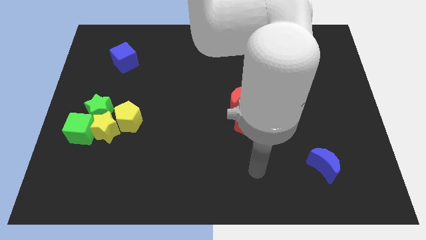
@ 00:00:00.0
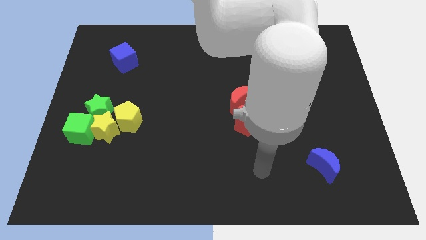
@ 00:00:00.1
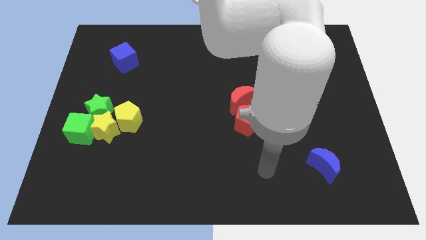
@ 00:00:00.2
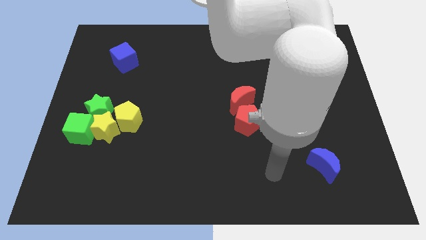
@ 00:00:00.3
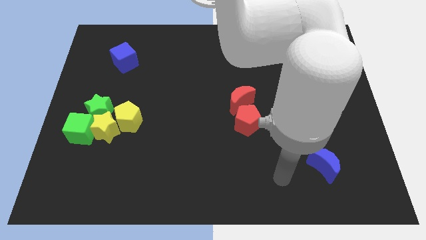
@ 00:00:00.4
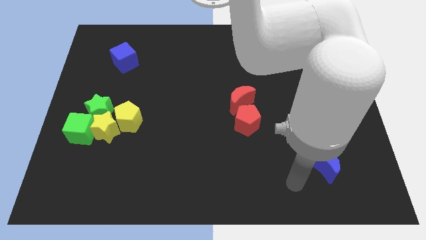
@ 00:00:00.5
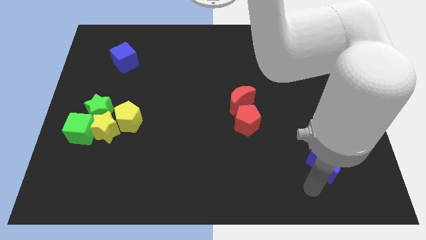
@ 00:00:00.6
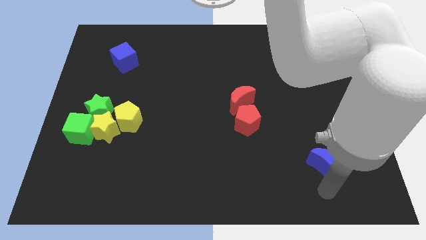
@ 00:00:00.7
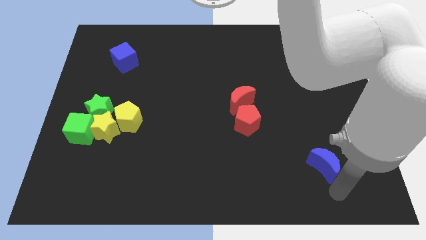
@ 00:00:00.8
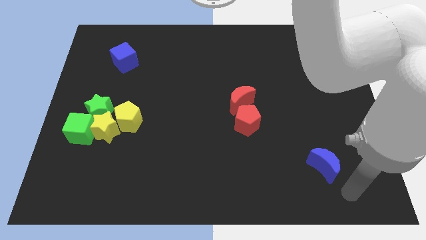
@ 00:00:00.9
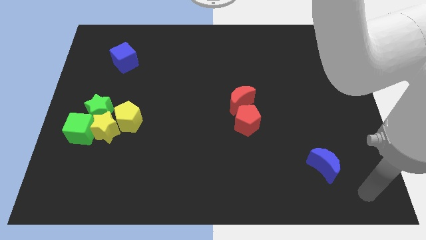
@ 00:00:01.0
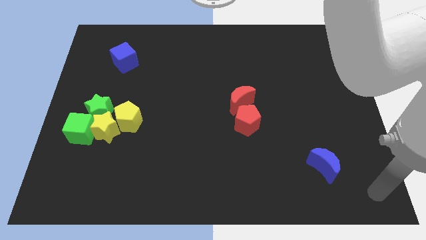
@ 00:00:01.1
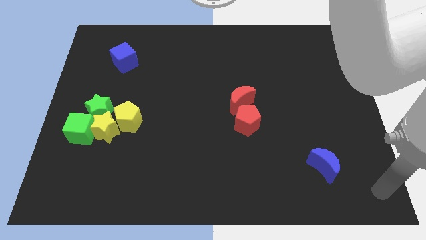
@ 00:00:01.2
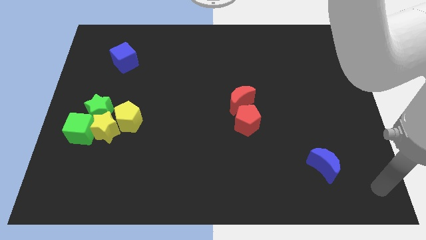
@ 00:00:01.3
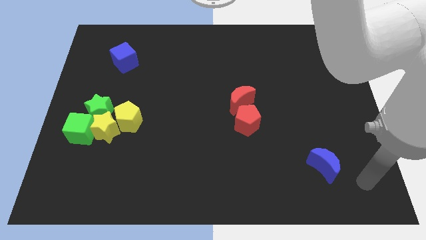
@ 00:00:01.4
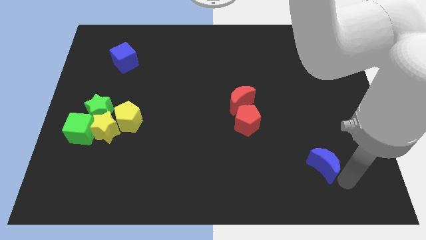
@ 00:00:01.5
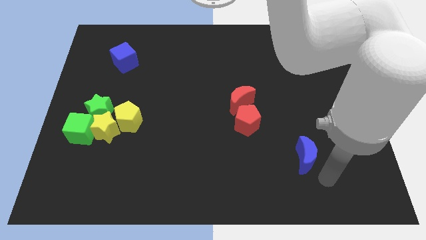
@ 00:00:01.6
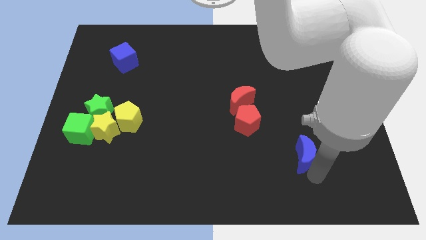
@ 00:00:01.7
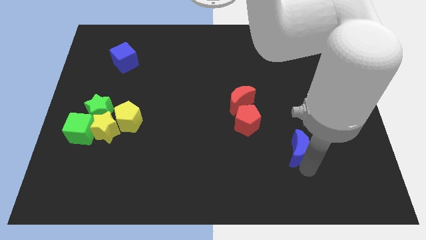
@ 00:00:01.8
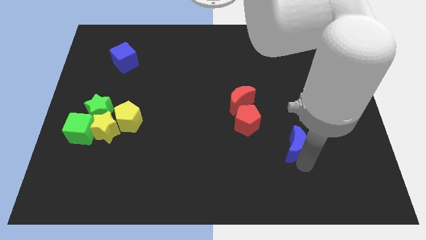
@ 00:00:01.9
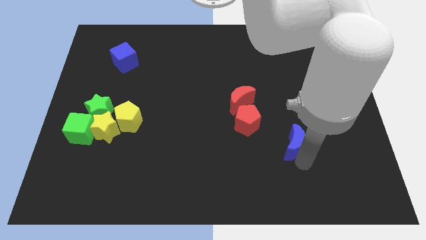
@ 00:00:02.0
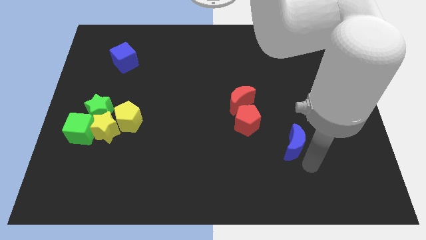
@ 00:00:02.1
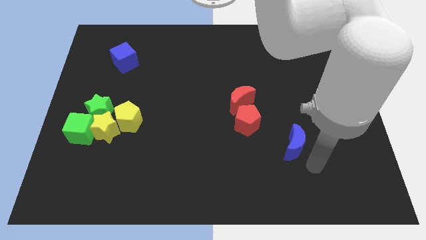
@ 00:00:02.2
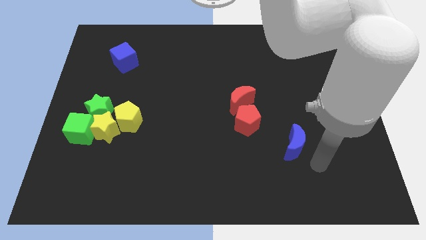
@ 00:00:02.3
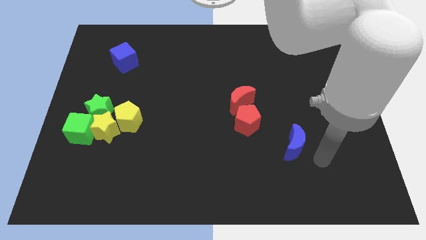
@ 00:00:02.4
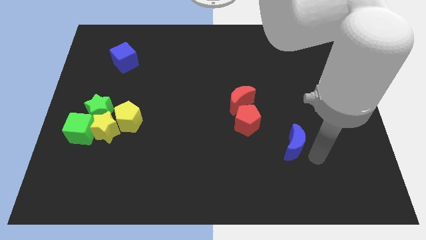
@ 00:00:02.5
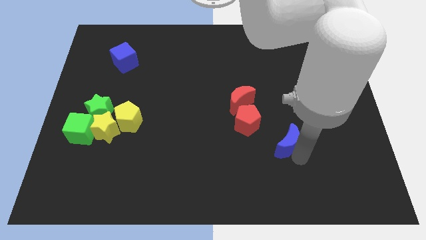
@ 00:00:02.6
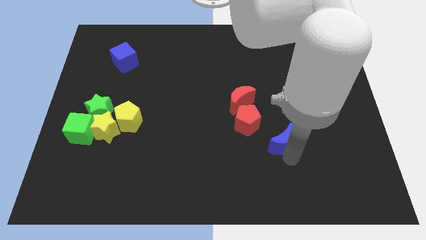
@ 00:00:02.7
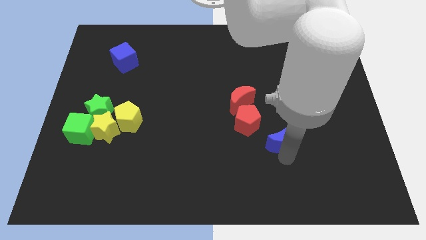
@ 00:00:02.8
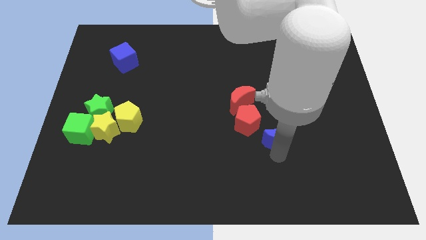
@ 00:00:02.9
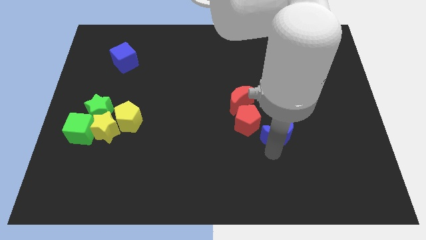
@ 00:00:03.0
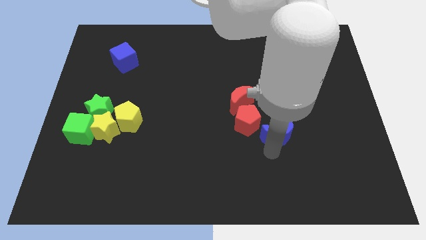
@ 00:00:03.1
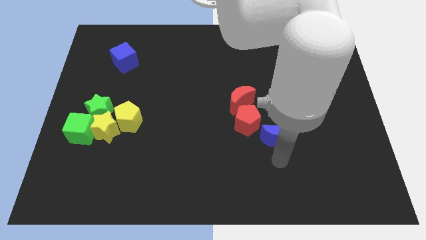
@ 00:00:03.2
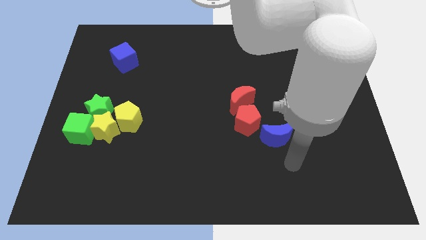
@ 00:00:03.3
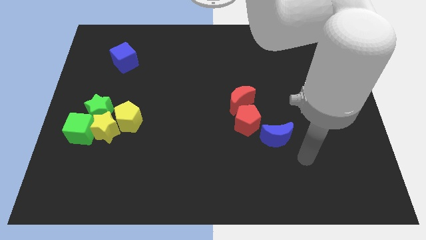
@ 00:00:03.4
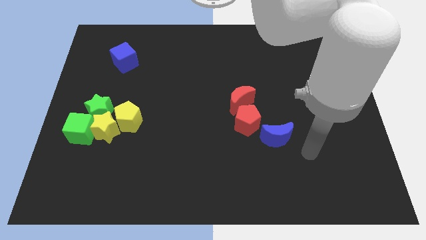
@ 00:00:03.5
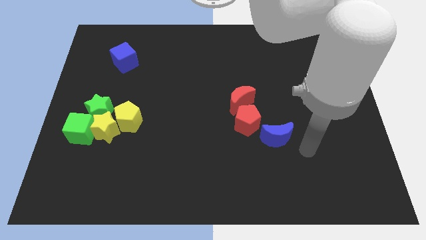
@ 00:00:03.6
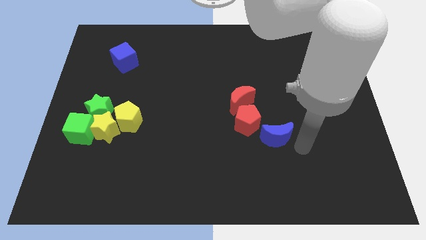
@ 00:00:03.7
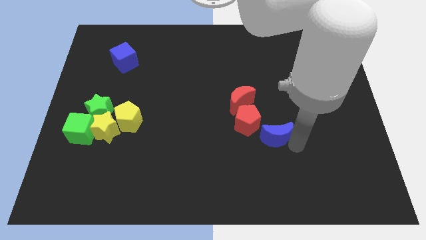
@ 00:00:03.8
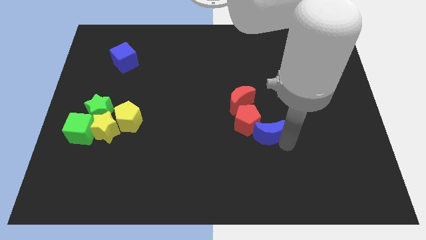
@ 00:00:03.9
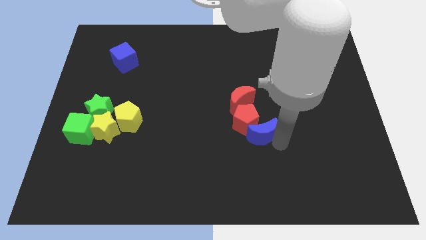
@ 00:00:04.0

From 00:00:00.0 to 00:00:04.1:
push the blue moon bottom right to red pentagon

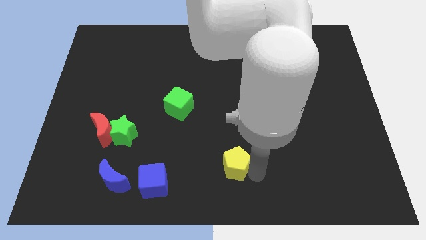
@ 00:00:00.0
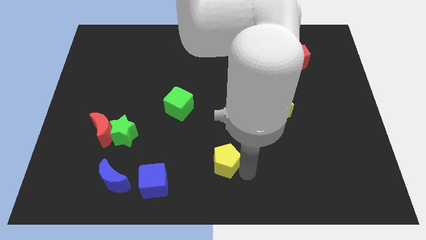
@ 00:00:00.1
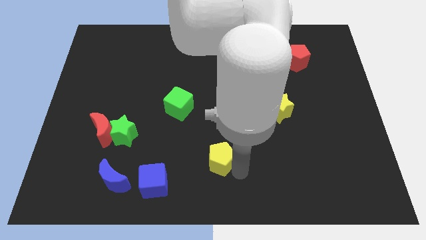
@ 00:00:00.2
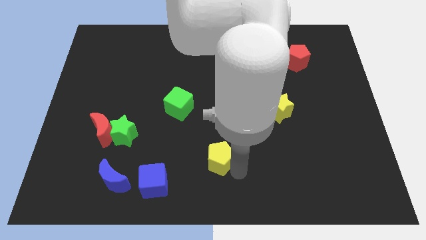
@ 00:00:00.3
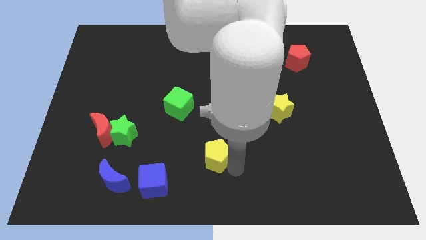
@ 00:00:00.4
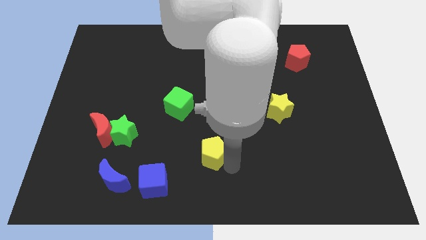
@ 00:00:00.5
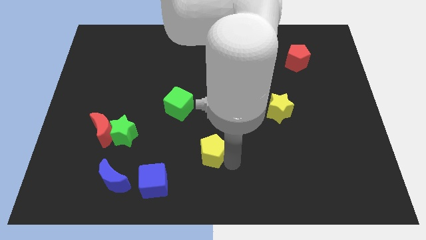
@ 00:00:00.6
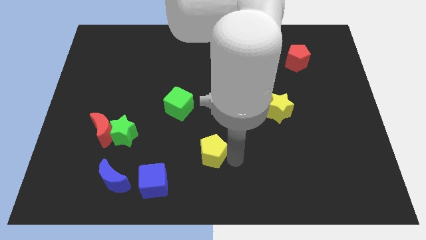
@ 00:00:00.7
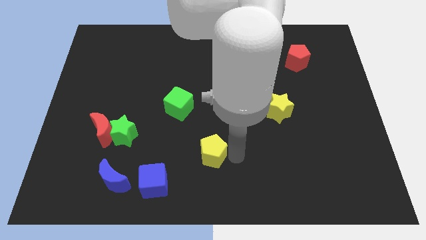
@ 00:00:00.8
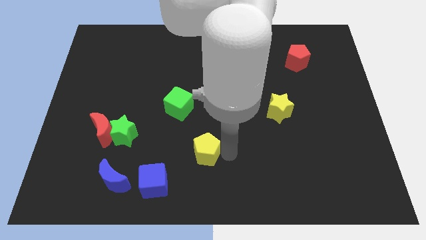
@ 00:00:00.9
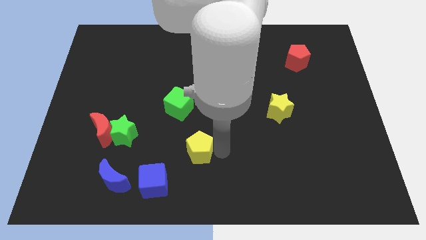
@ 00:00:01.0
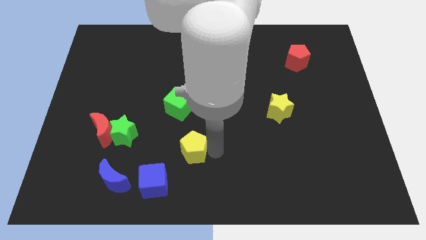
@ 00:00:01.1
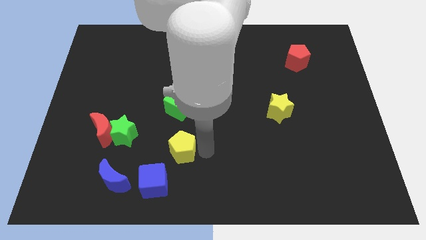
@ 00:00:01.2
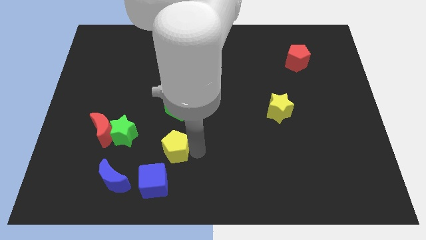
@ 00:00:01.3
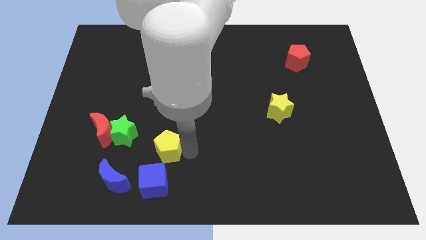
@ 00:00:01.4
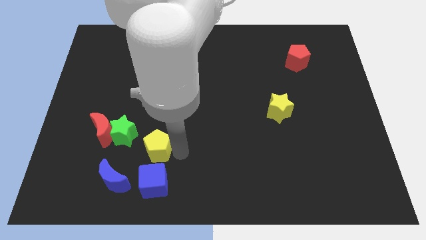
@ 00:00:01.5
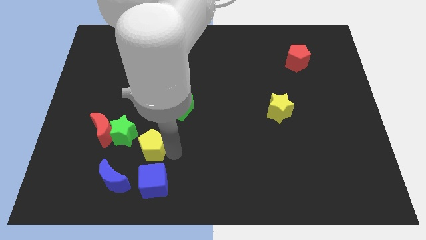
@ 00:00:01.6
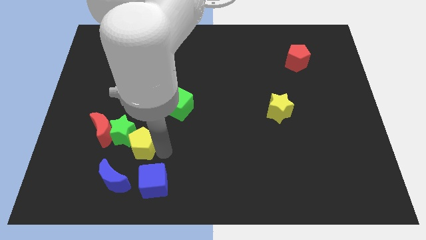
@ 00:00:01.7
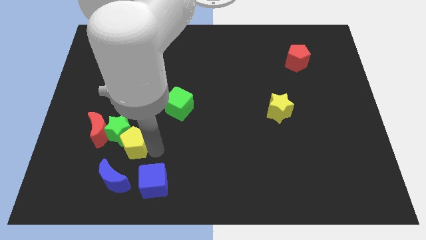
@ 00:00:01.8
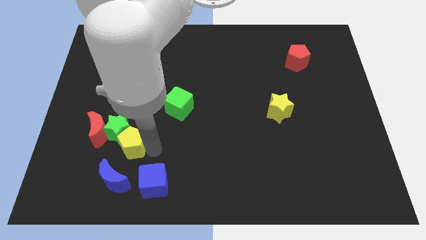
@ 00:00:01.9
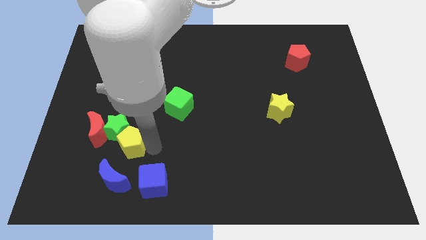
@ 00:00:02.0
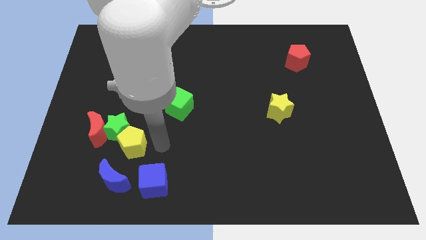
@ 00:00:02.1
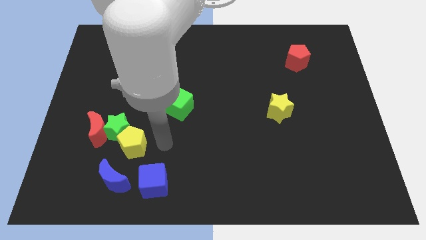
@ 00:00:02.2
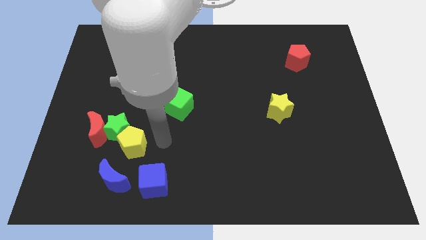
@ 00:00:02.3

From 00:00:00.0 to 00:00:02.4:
move the yellow pentagon into the green star

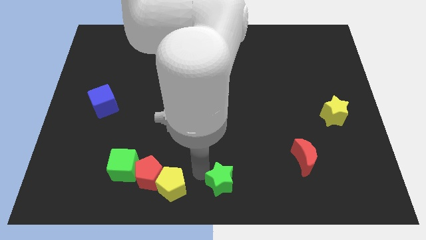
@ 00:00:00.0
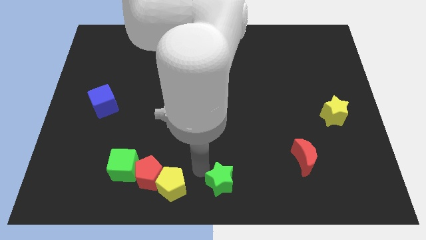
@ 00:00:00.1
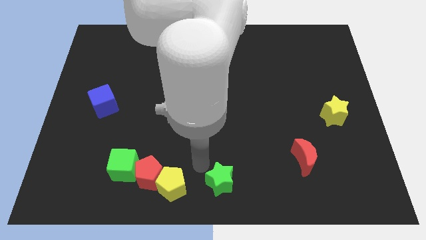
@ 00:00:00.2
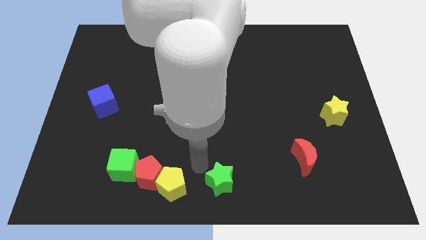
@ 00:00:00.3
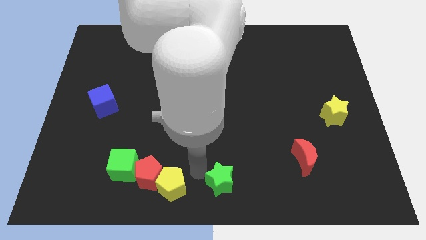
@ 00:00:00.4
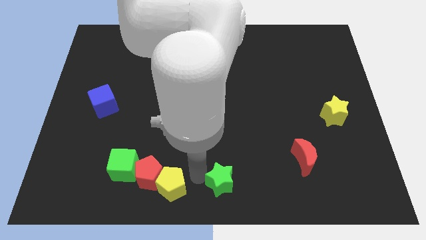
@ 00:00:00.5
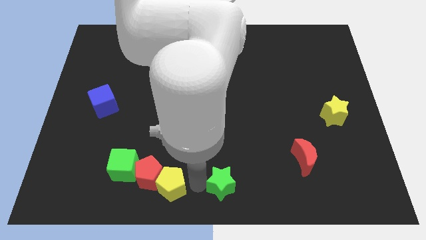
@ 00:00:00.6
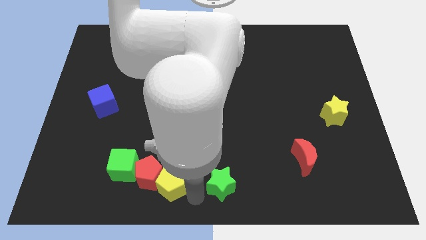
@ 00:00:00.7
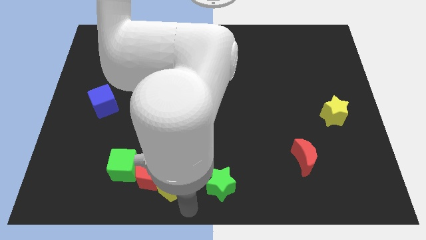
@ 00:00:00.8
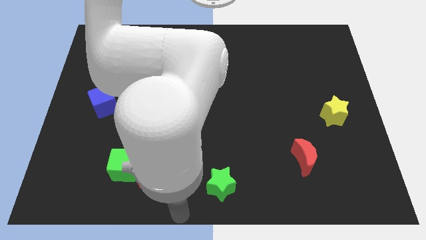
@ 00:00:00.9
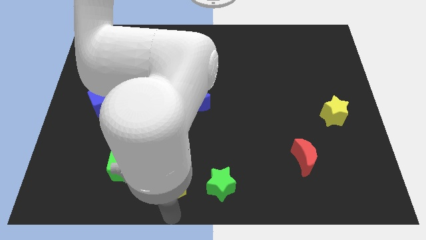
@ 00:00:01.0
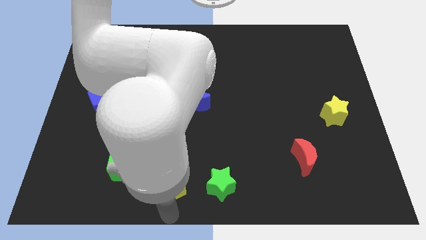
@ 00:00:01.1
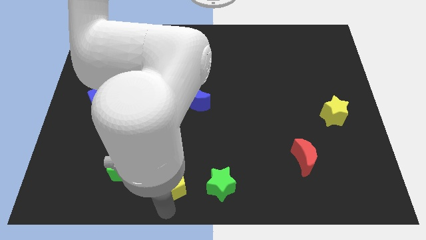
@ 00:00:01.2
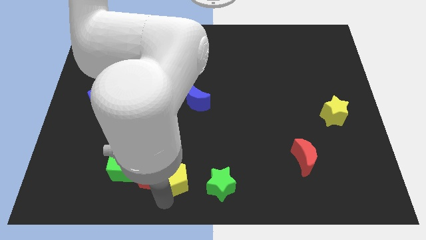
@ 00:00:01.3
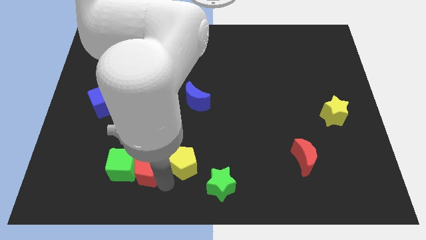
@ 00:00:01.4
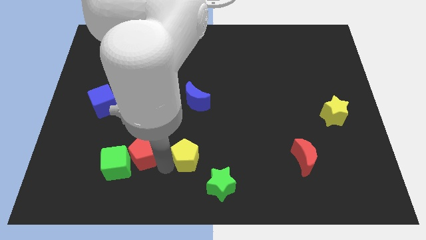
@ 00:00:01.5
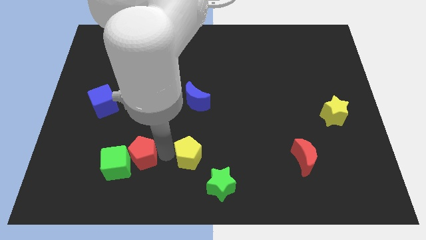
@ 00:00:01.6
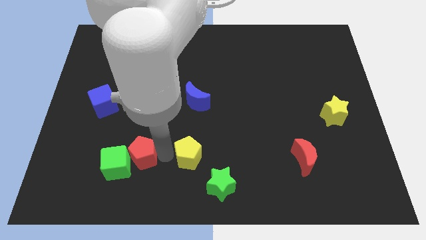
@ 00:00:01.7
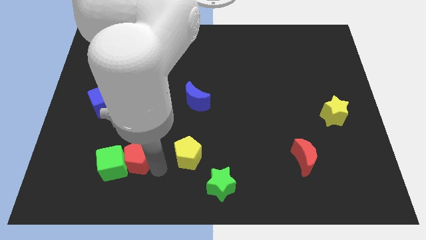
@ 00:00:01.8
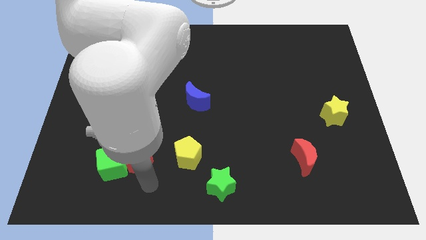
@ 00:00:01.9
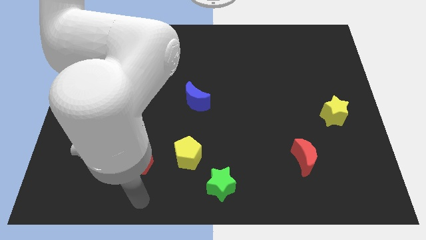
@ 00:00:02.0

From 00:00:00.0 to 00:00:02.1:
separate the yellow pentagon away from the red pentagon
